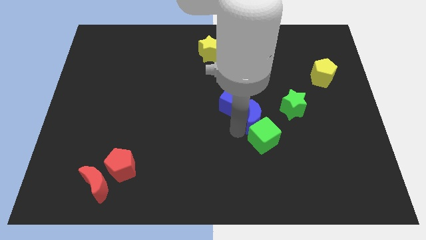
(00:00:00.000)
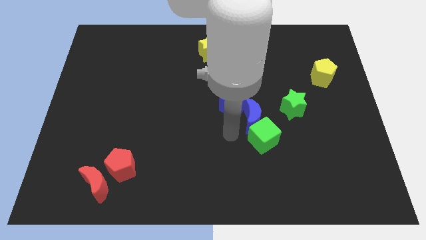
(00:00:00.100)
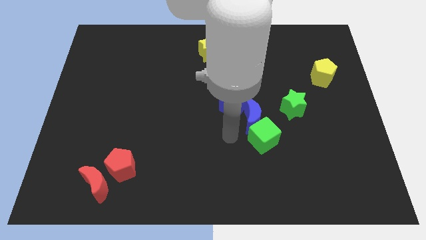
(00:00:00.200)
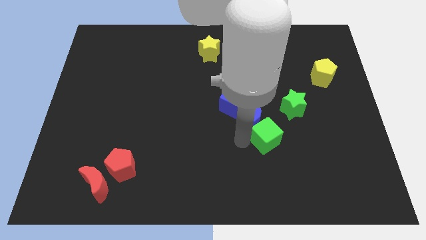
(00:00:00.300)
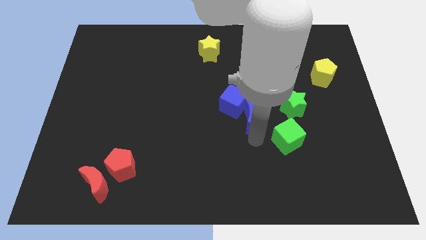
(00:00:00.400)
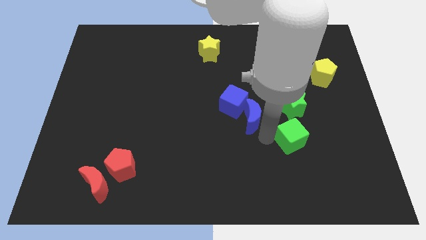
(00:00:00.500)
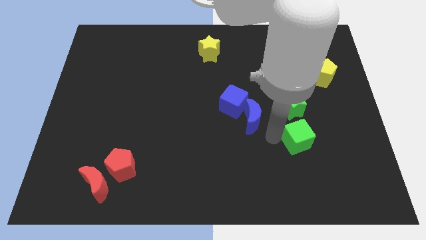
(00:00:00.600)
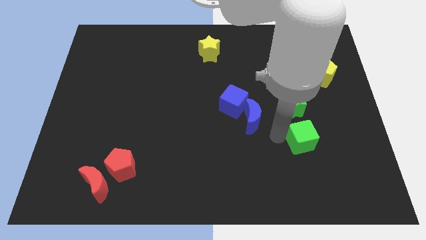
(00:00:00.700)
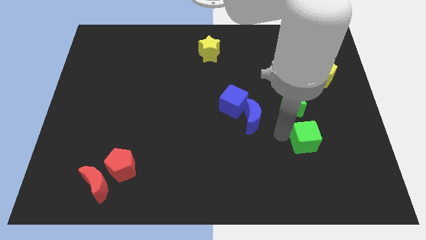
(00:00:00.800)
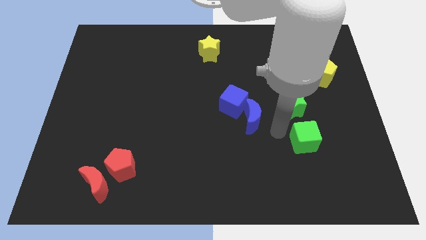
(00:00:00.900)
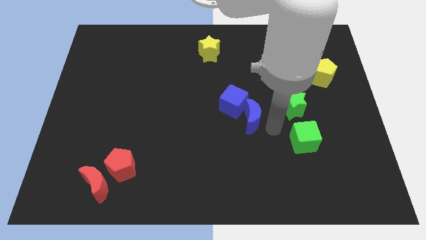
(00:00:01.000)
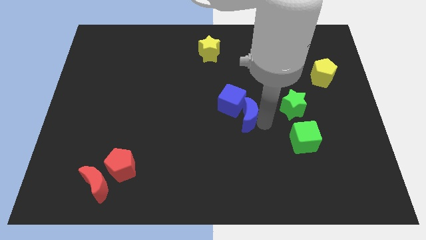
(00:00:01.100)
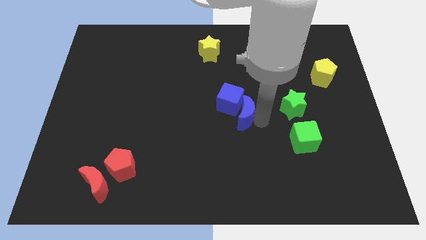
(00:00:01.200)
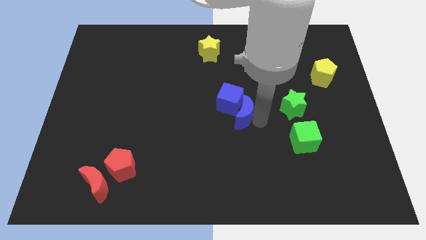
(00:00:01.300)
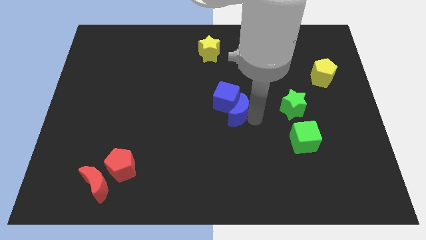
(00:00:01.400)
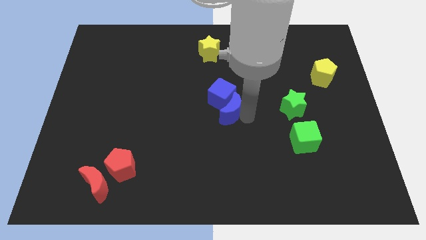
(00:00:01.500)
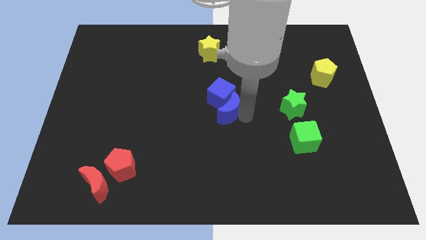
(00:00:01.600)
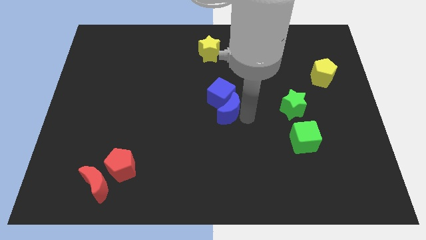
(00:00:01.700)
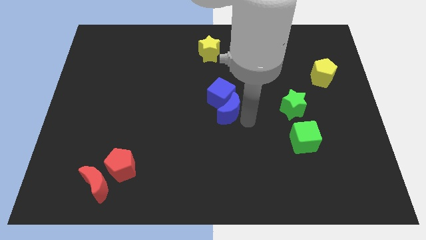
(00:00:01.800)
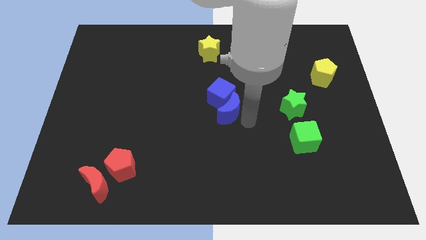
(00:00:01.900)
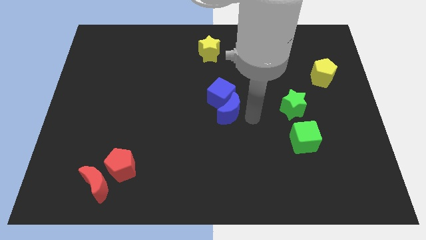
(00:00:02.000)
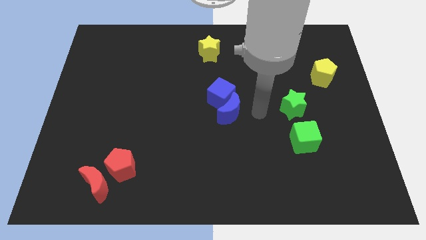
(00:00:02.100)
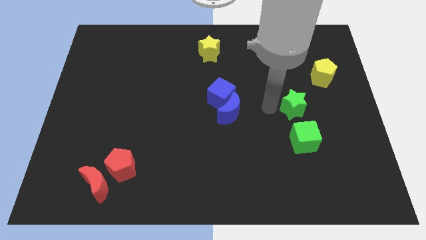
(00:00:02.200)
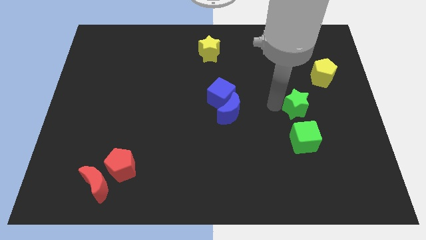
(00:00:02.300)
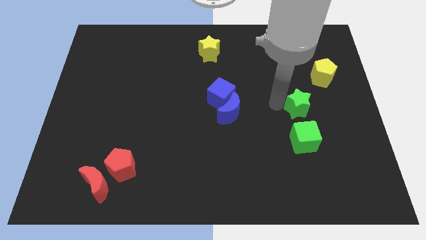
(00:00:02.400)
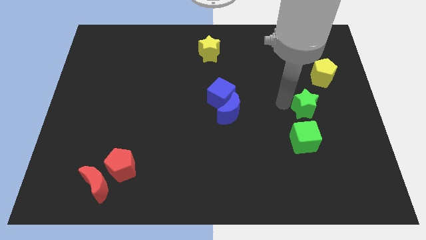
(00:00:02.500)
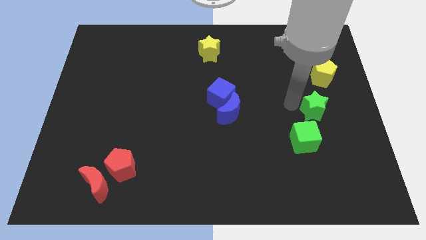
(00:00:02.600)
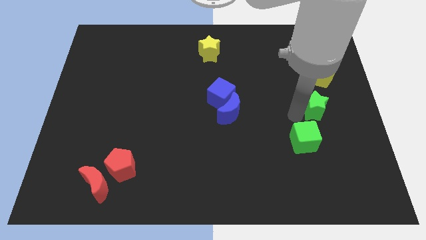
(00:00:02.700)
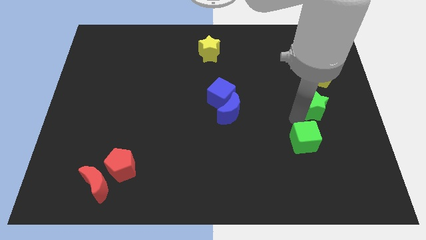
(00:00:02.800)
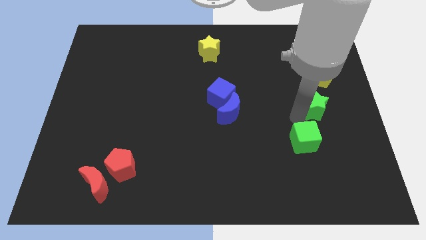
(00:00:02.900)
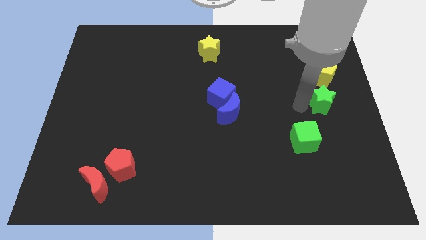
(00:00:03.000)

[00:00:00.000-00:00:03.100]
move the green blocks away from the blue blocks

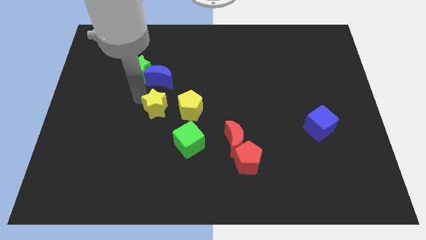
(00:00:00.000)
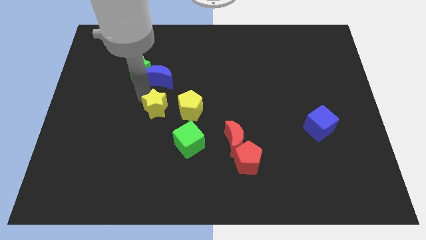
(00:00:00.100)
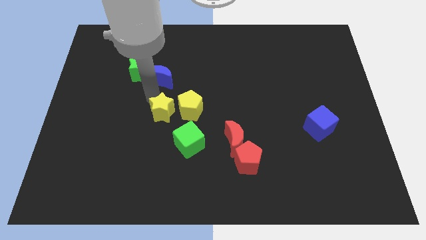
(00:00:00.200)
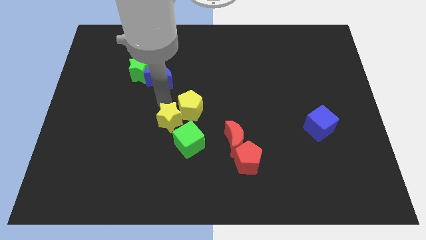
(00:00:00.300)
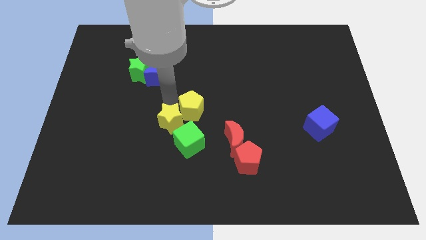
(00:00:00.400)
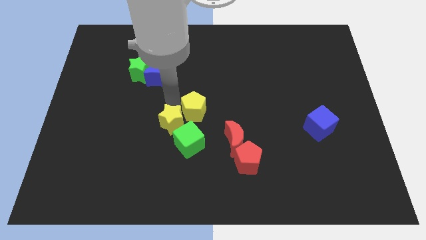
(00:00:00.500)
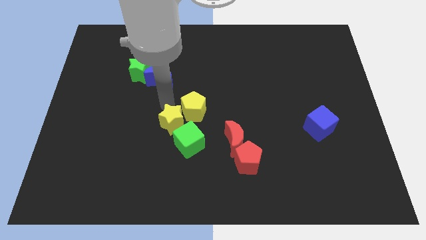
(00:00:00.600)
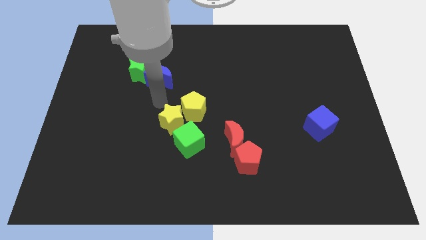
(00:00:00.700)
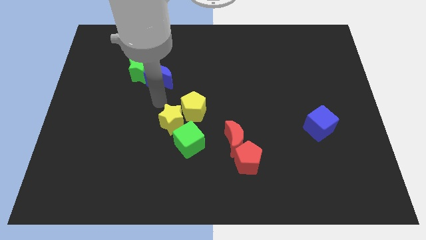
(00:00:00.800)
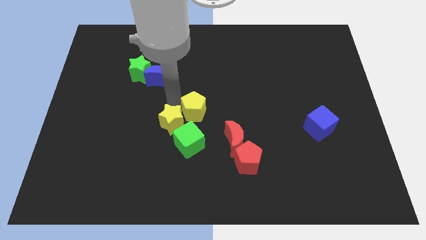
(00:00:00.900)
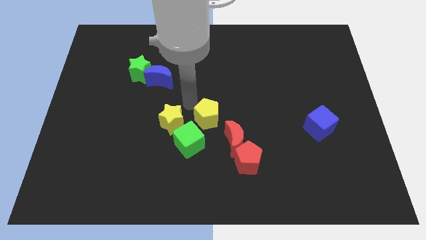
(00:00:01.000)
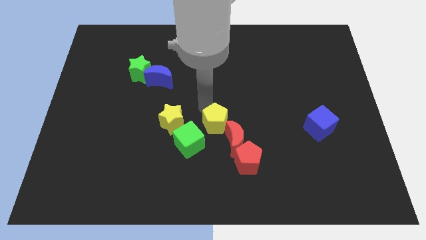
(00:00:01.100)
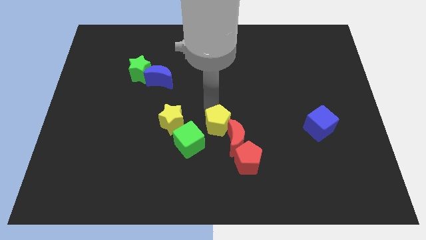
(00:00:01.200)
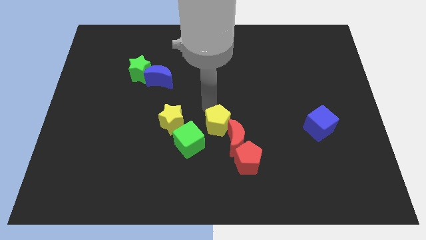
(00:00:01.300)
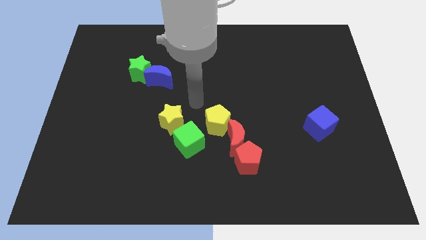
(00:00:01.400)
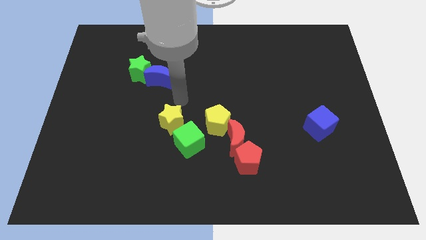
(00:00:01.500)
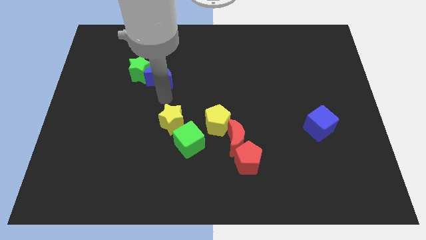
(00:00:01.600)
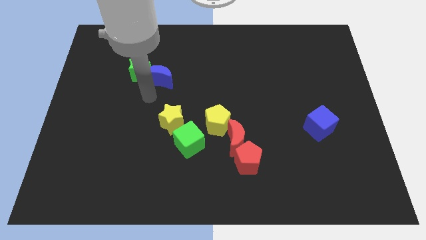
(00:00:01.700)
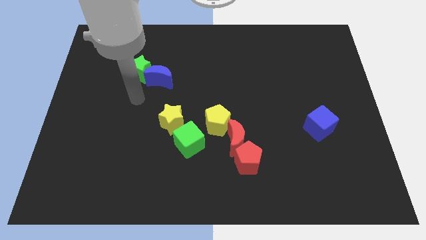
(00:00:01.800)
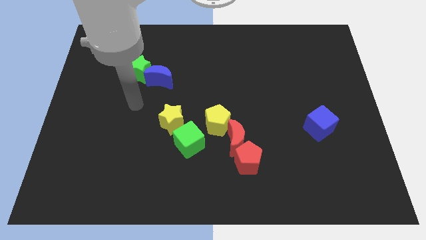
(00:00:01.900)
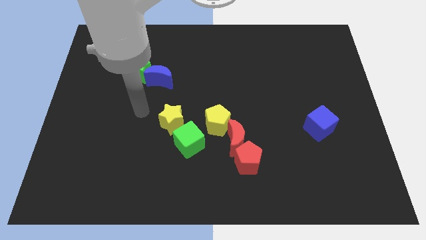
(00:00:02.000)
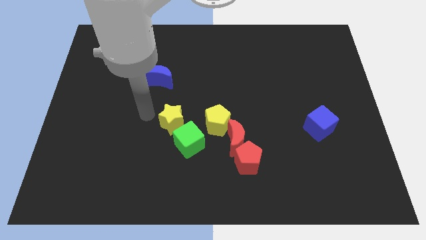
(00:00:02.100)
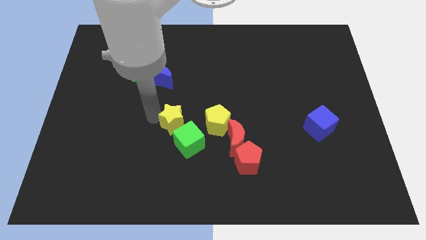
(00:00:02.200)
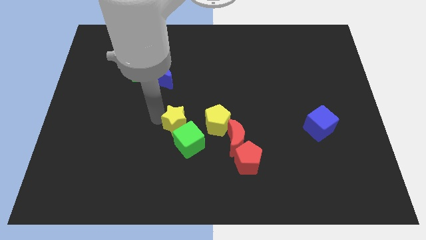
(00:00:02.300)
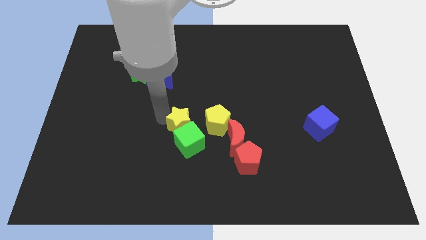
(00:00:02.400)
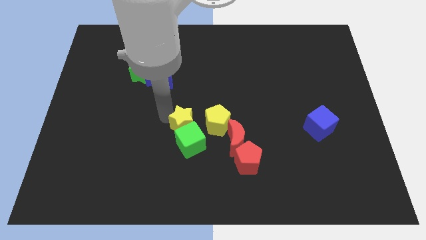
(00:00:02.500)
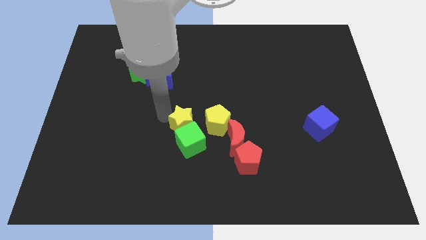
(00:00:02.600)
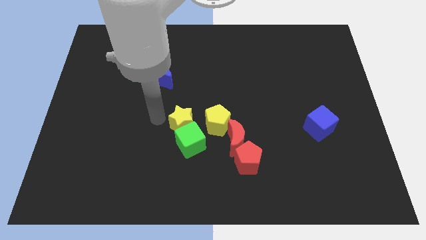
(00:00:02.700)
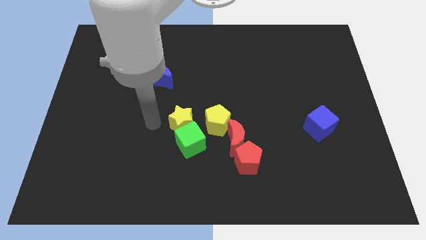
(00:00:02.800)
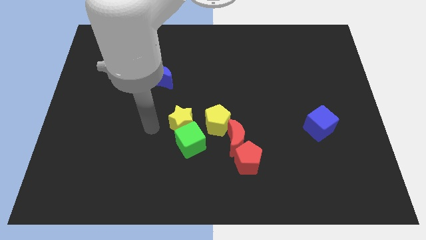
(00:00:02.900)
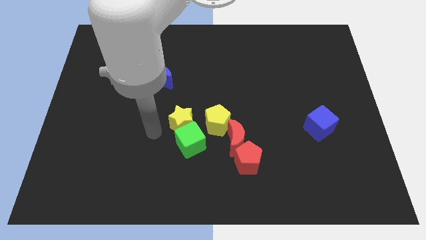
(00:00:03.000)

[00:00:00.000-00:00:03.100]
move the yellow star into the green cube

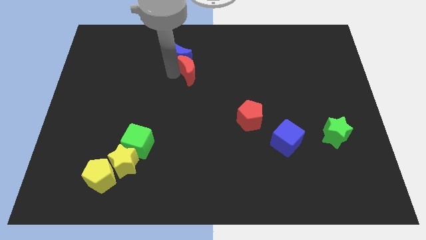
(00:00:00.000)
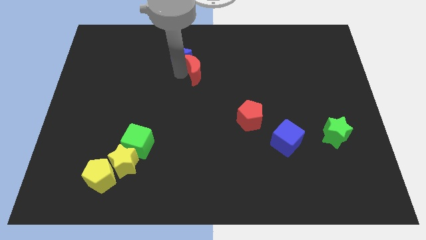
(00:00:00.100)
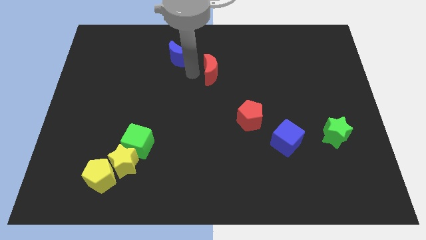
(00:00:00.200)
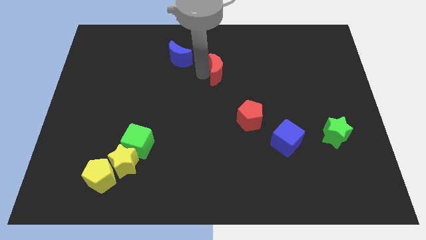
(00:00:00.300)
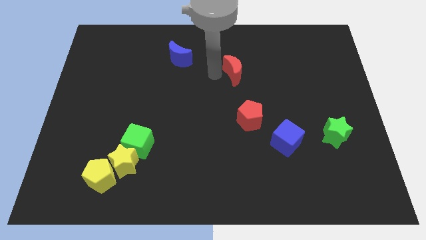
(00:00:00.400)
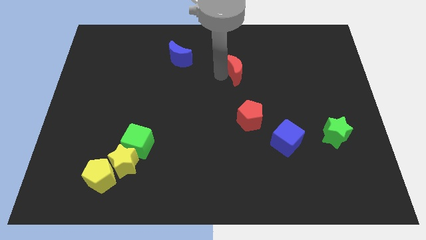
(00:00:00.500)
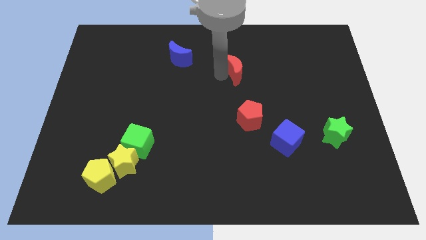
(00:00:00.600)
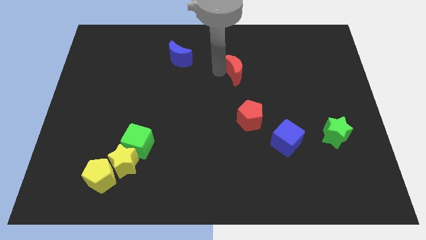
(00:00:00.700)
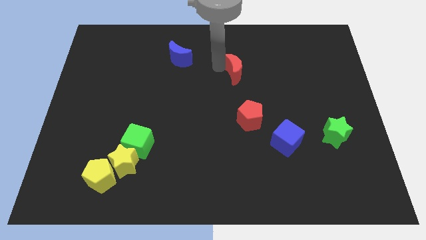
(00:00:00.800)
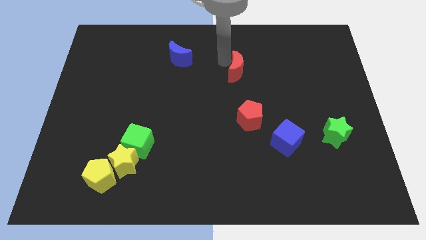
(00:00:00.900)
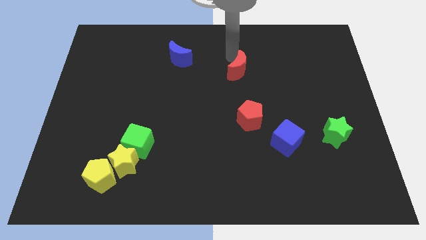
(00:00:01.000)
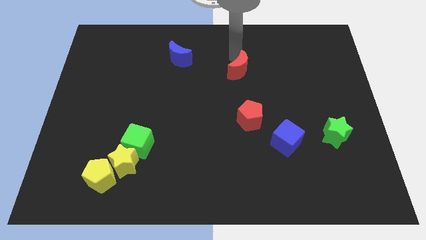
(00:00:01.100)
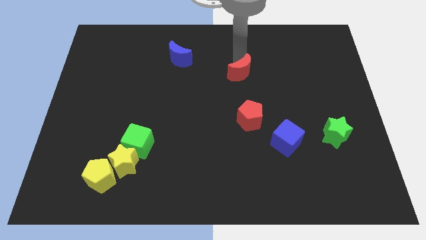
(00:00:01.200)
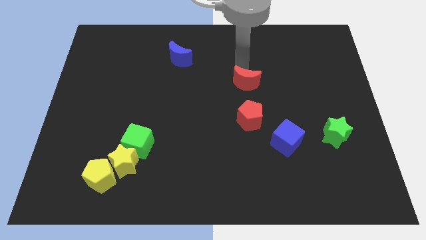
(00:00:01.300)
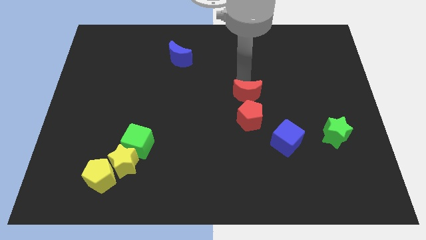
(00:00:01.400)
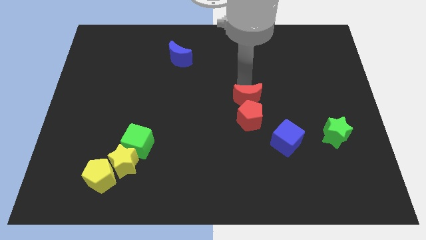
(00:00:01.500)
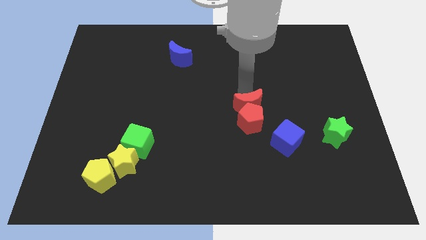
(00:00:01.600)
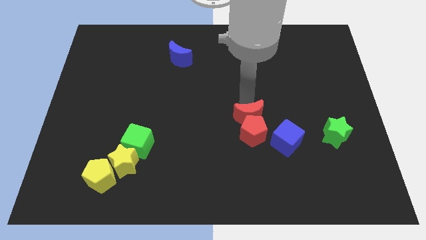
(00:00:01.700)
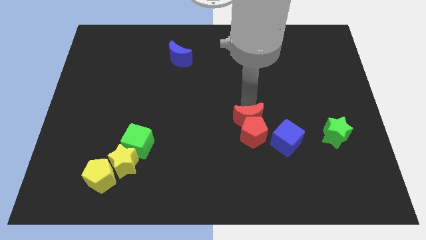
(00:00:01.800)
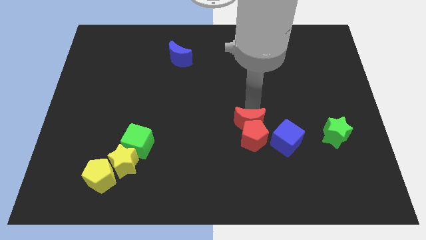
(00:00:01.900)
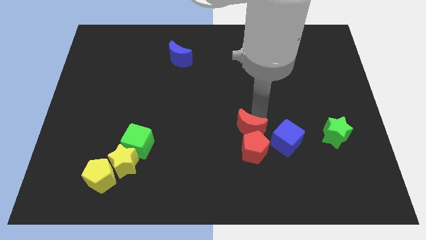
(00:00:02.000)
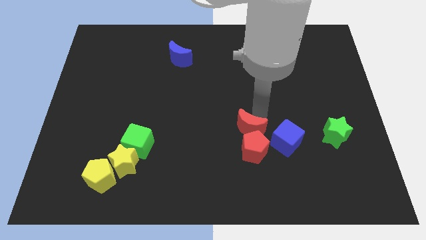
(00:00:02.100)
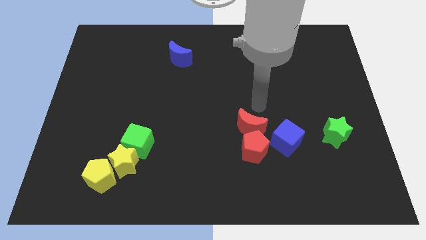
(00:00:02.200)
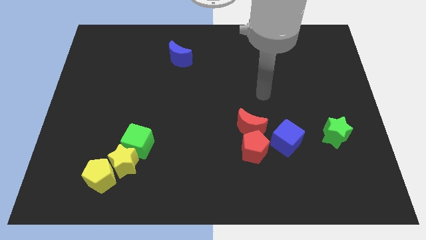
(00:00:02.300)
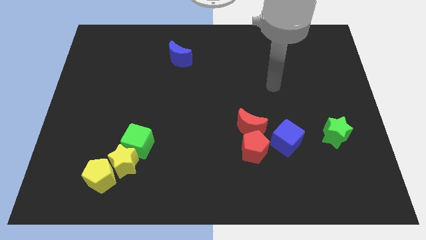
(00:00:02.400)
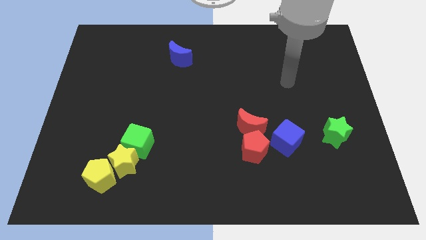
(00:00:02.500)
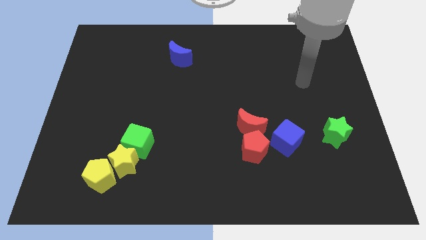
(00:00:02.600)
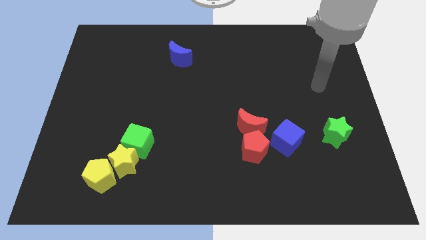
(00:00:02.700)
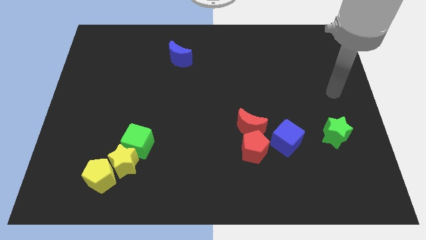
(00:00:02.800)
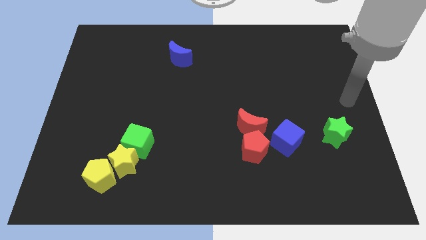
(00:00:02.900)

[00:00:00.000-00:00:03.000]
move the red blocks to the left of the blue cube
